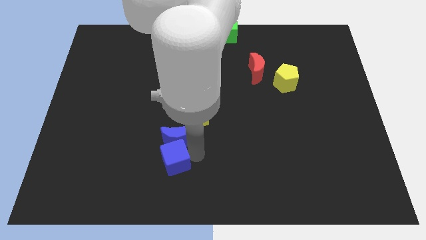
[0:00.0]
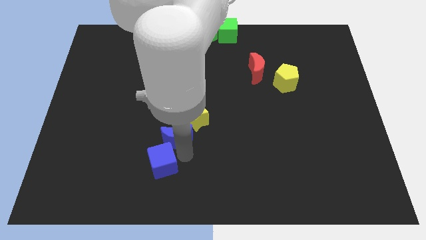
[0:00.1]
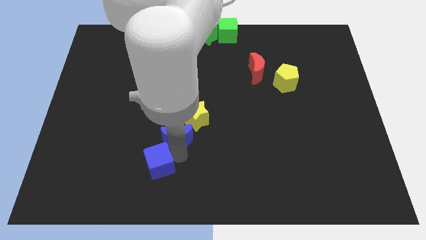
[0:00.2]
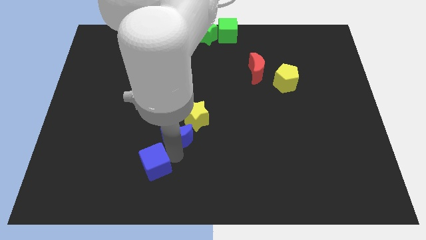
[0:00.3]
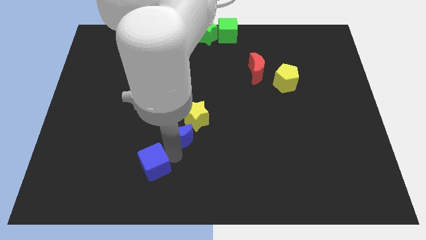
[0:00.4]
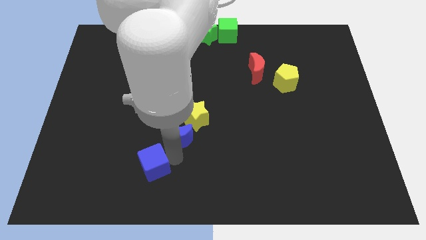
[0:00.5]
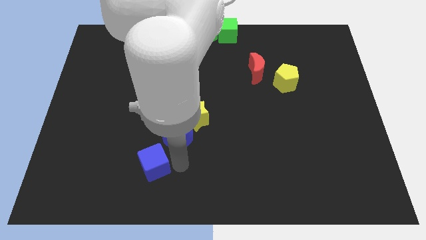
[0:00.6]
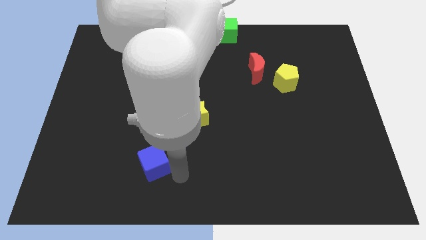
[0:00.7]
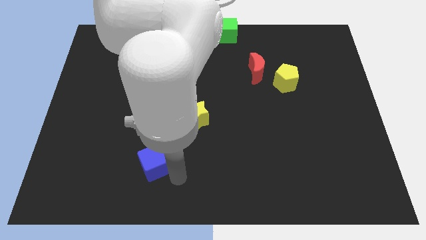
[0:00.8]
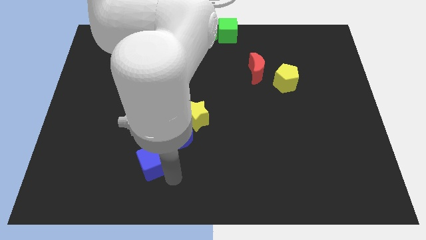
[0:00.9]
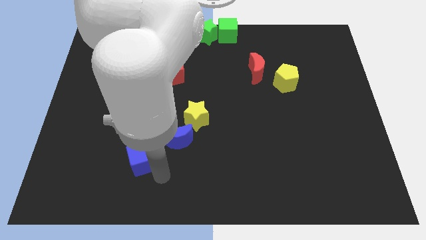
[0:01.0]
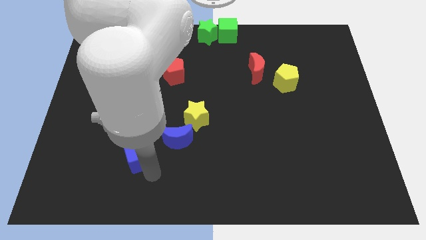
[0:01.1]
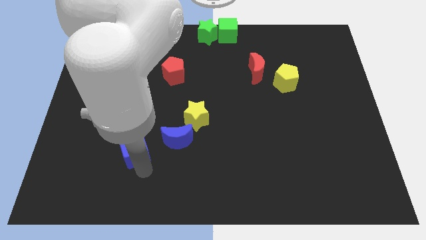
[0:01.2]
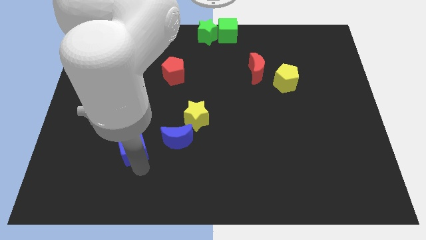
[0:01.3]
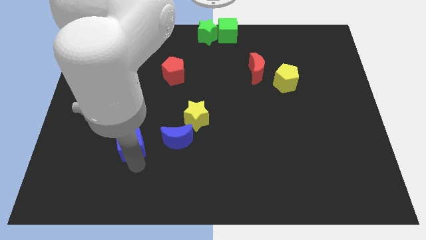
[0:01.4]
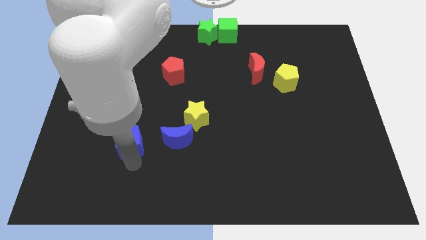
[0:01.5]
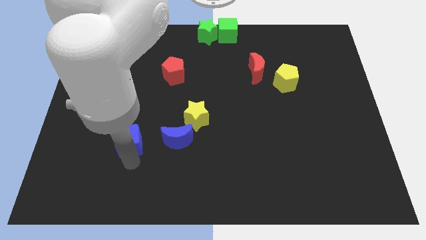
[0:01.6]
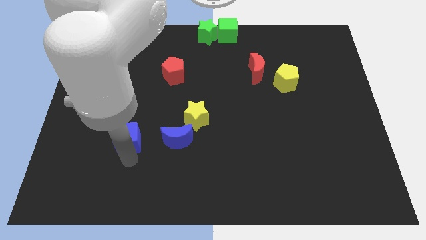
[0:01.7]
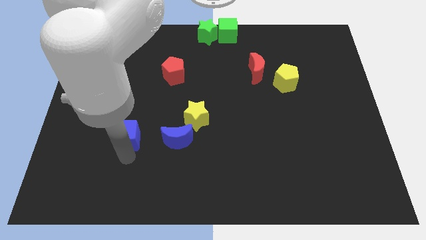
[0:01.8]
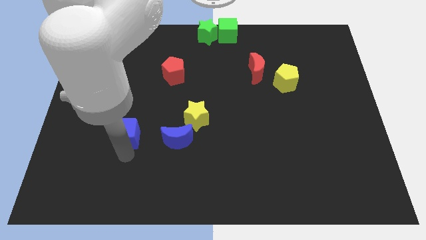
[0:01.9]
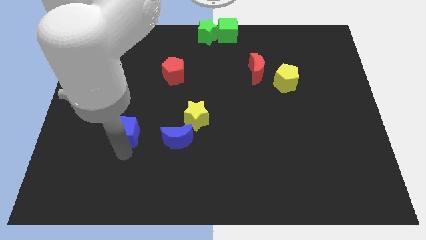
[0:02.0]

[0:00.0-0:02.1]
place blue cube to the left of blue crescent

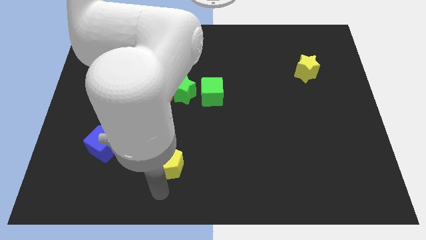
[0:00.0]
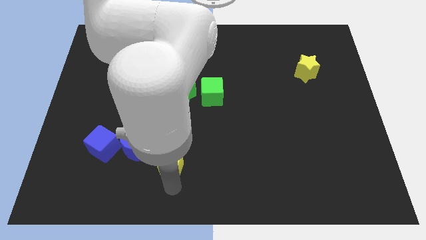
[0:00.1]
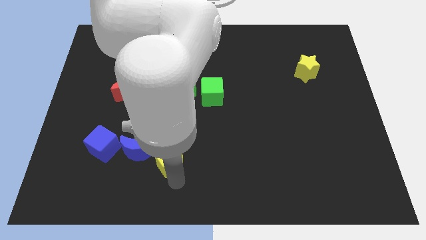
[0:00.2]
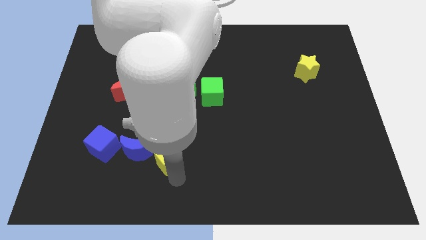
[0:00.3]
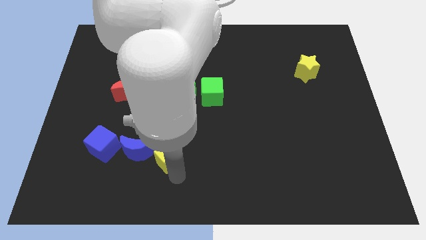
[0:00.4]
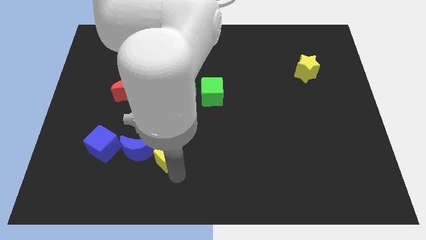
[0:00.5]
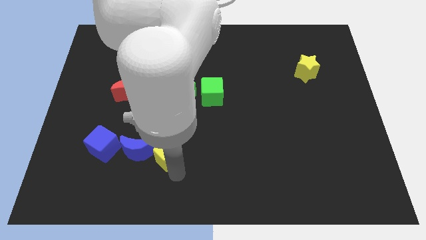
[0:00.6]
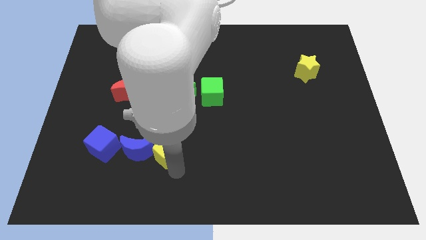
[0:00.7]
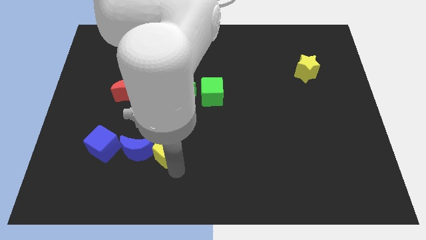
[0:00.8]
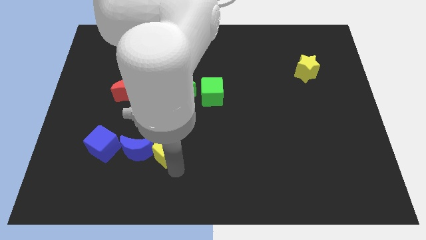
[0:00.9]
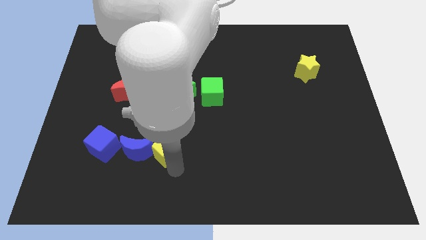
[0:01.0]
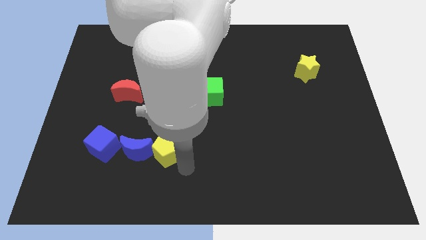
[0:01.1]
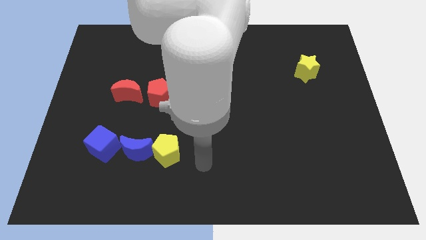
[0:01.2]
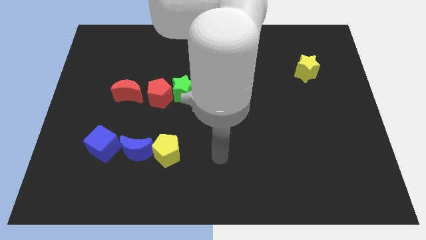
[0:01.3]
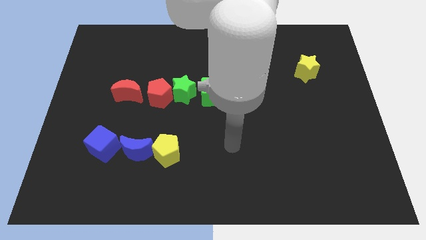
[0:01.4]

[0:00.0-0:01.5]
move the yellow pentagon slightly to right of blue crescent

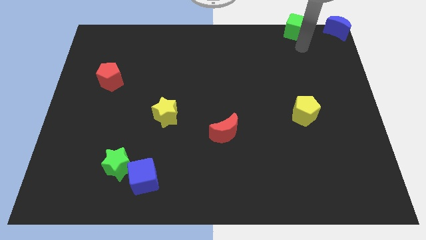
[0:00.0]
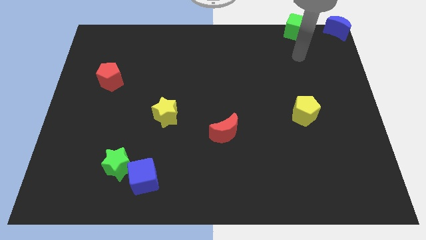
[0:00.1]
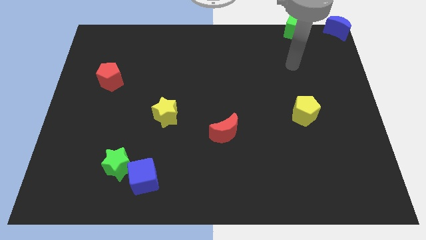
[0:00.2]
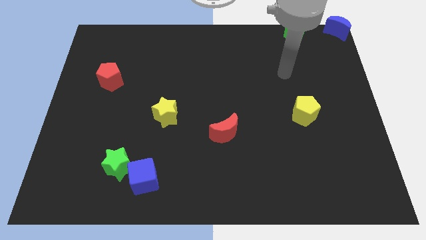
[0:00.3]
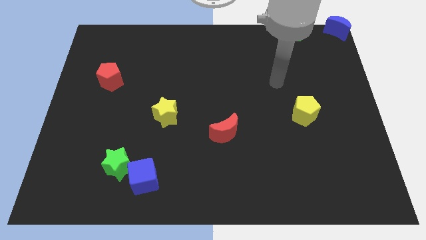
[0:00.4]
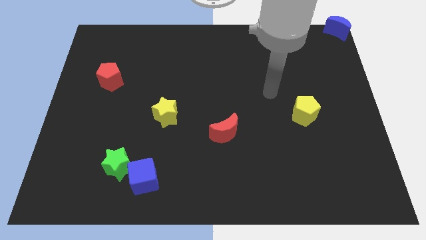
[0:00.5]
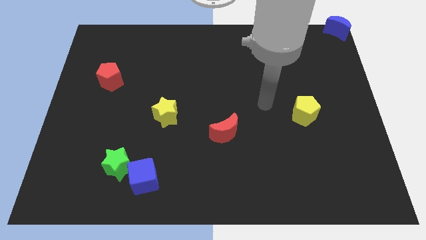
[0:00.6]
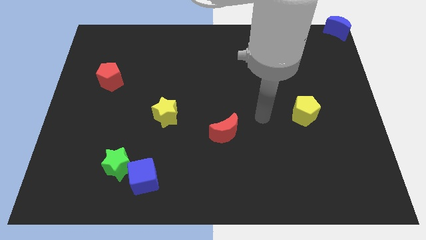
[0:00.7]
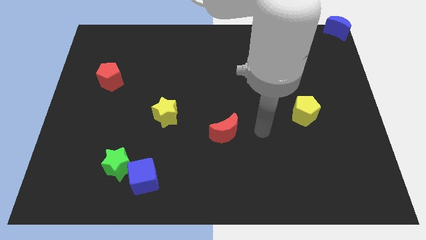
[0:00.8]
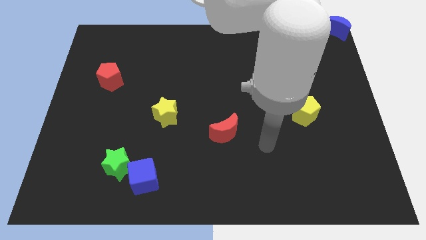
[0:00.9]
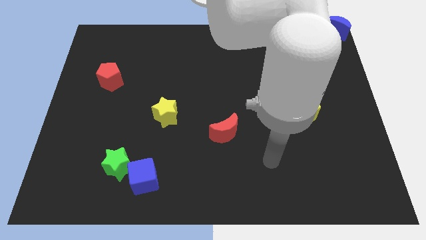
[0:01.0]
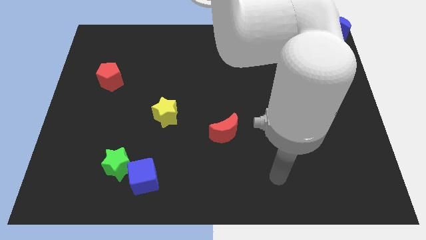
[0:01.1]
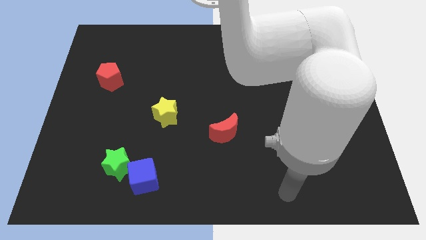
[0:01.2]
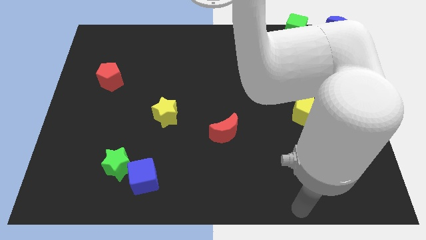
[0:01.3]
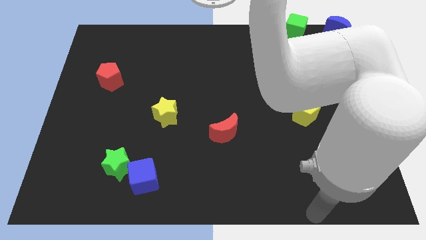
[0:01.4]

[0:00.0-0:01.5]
go away from the green cube

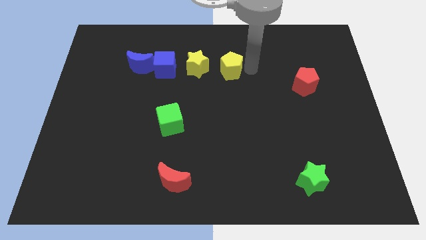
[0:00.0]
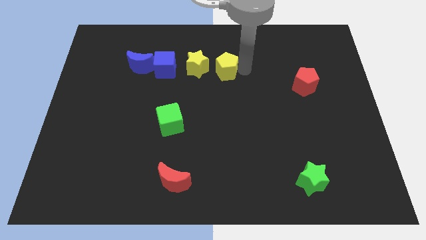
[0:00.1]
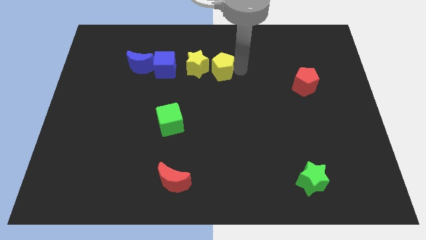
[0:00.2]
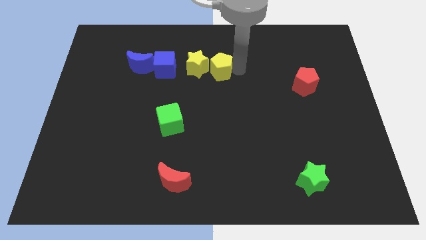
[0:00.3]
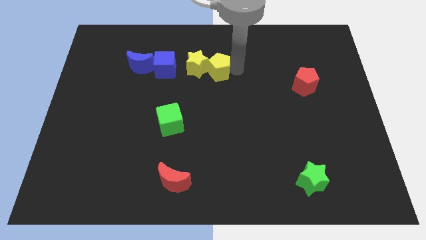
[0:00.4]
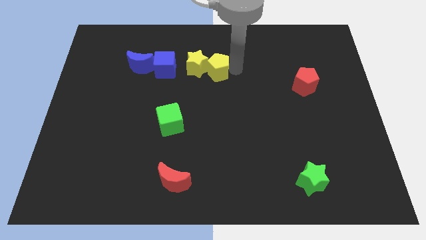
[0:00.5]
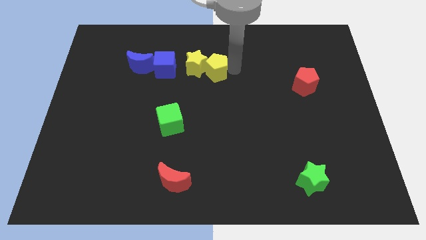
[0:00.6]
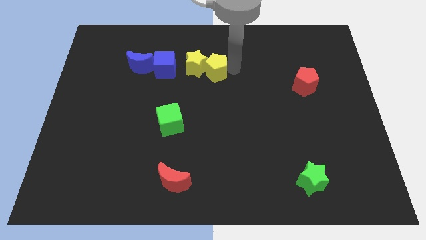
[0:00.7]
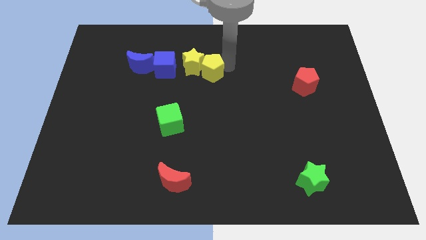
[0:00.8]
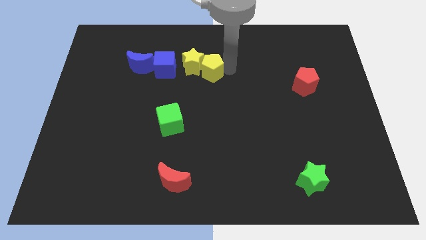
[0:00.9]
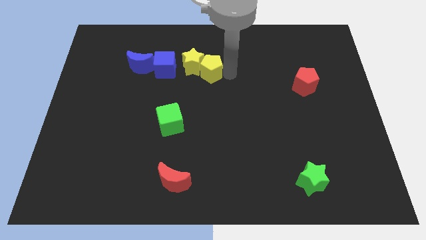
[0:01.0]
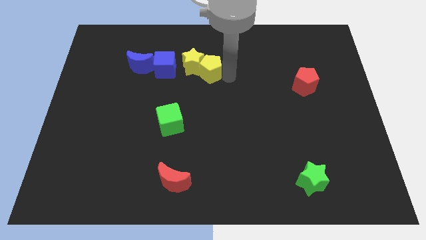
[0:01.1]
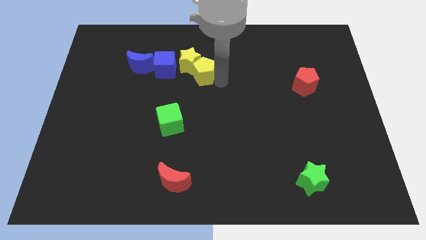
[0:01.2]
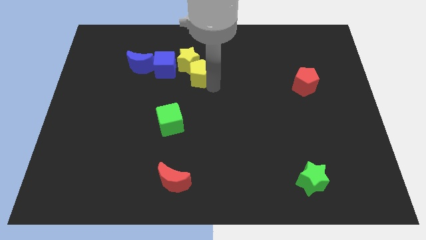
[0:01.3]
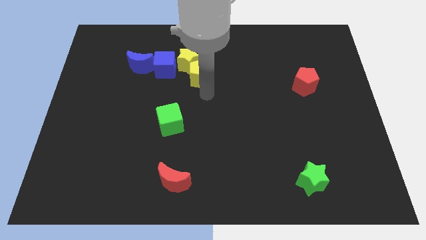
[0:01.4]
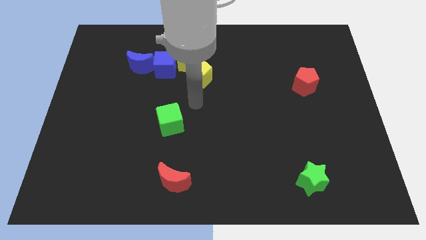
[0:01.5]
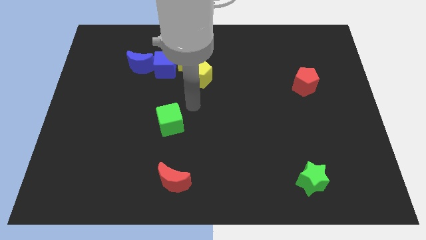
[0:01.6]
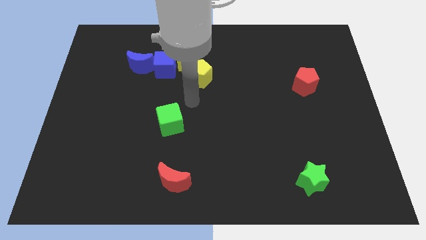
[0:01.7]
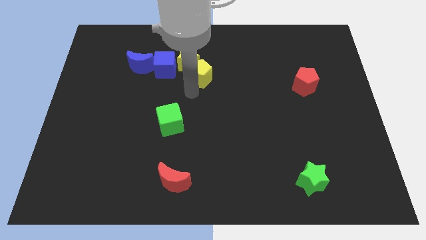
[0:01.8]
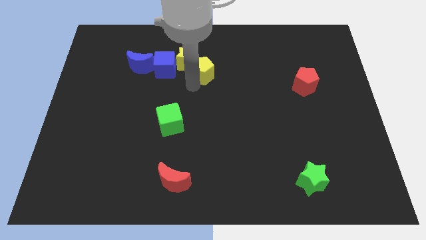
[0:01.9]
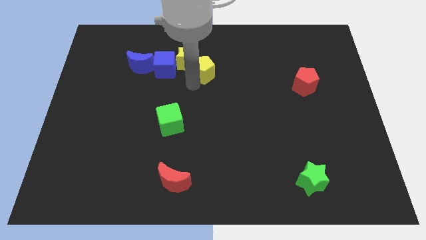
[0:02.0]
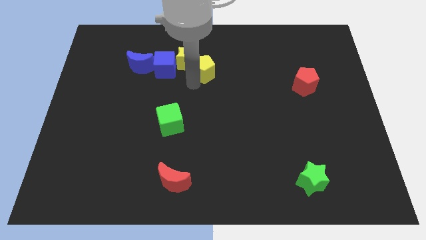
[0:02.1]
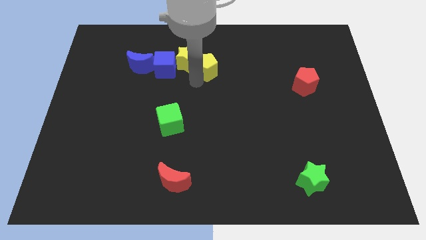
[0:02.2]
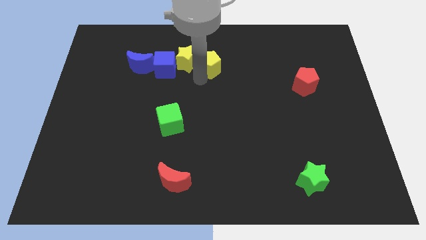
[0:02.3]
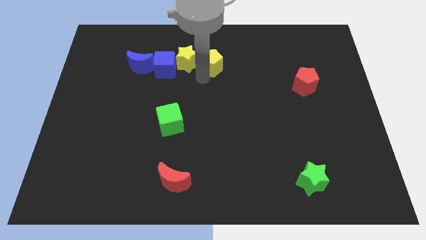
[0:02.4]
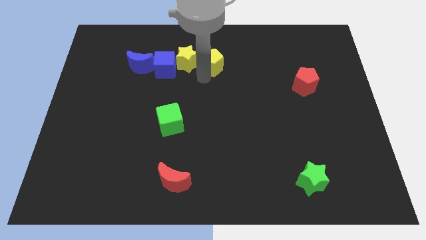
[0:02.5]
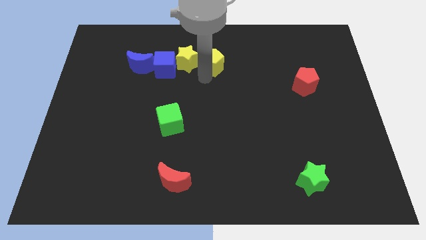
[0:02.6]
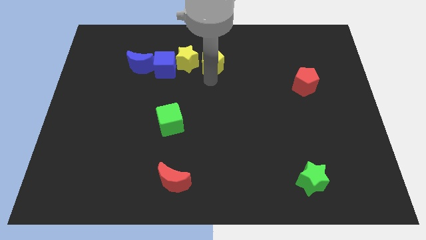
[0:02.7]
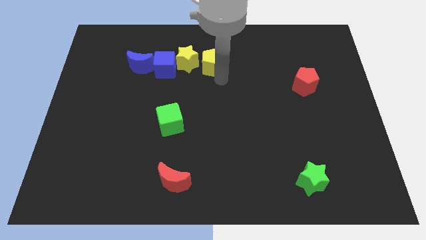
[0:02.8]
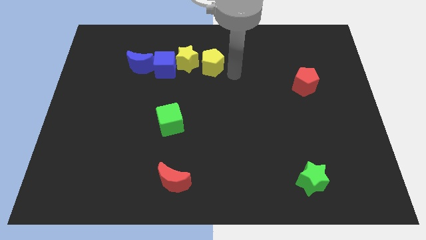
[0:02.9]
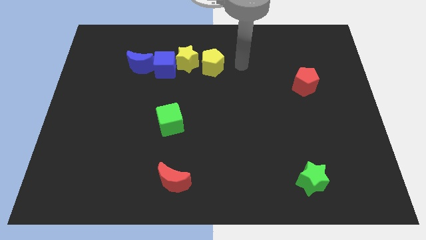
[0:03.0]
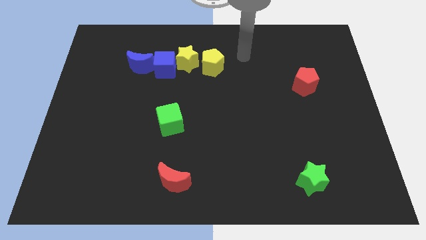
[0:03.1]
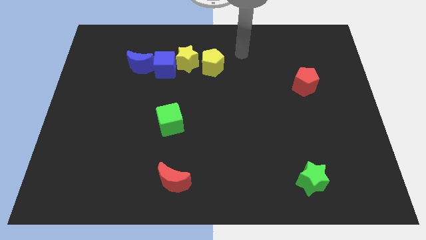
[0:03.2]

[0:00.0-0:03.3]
move the yellow pentagon close to the yellow star

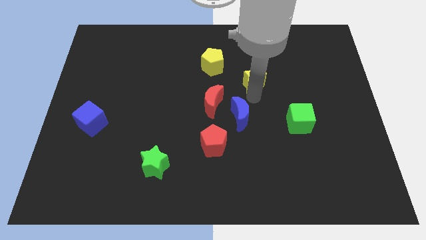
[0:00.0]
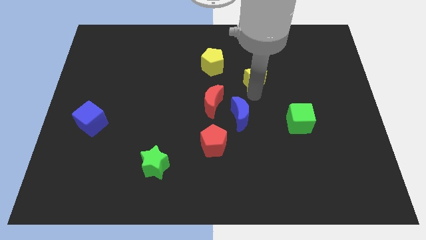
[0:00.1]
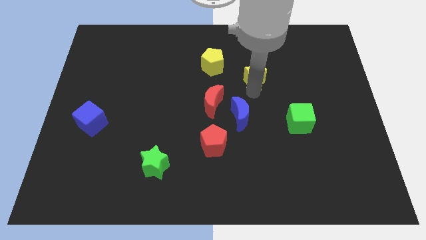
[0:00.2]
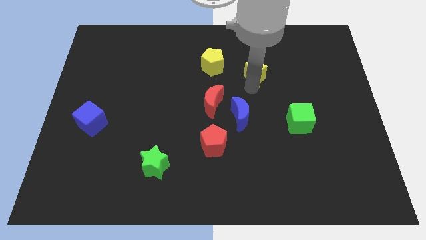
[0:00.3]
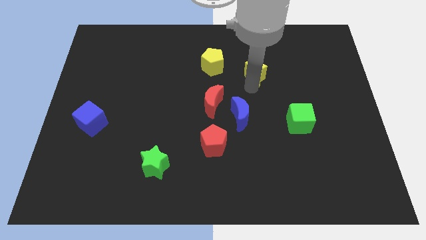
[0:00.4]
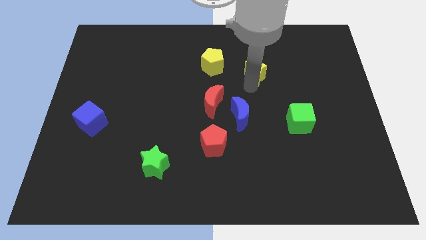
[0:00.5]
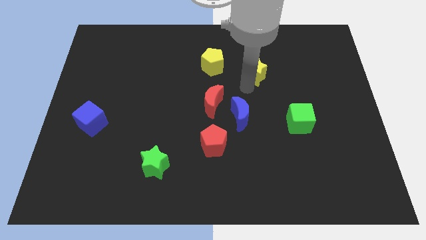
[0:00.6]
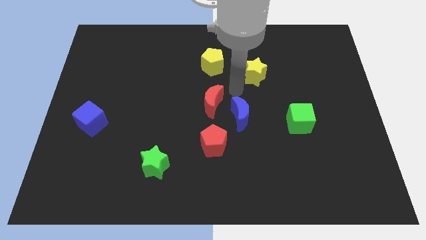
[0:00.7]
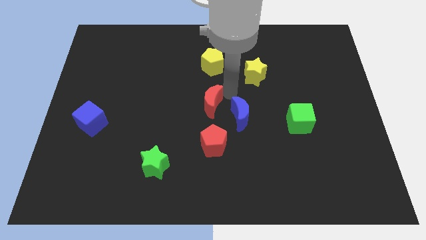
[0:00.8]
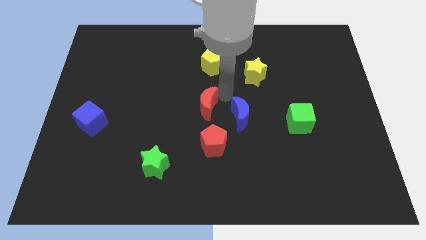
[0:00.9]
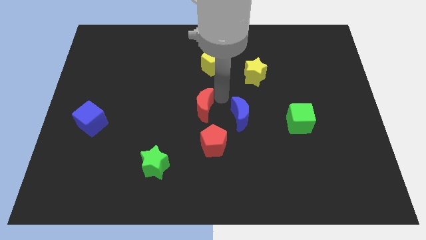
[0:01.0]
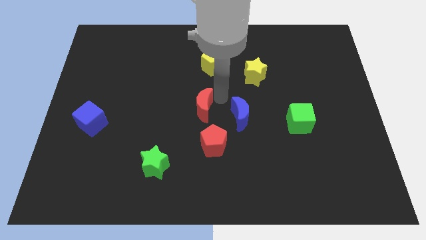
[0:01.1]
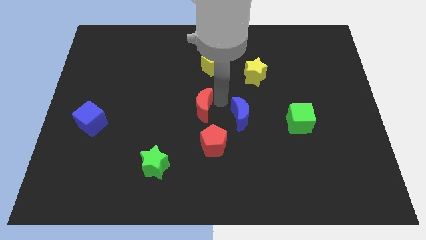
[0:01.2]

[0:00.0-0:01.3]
push the yellow star slightly up
